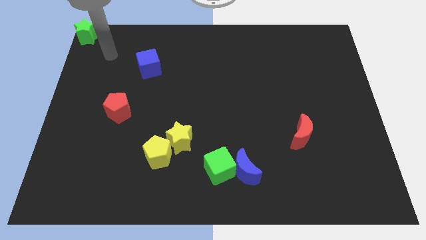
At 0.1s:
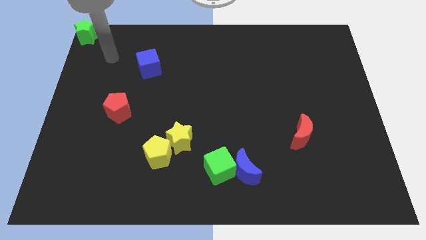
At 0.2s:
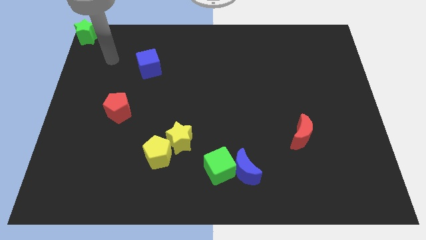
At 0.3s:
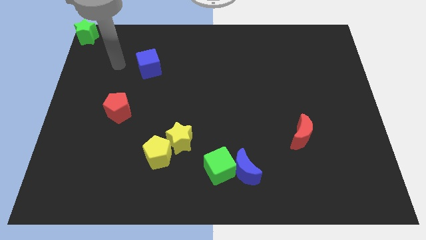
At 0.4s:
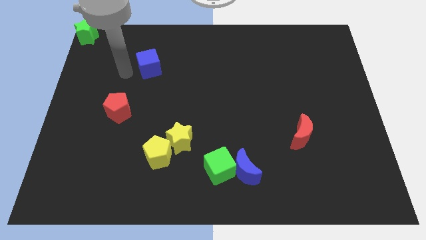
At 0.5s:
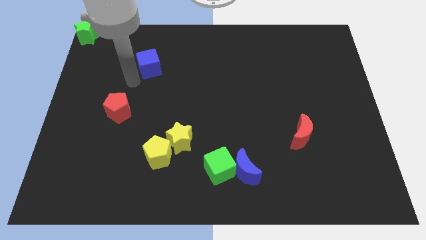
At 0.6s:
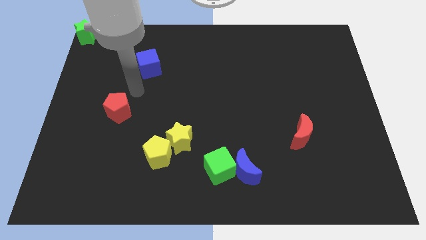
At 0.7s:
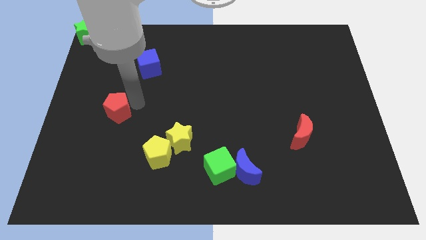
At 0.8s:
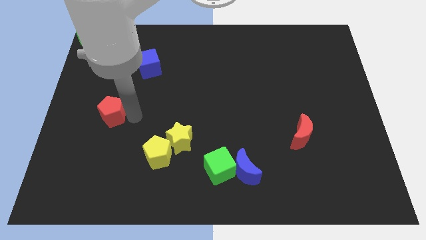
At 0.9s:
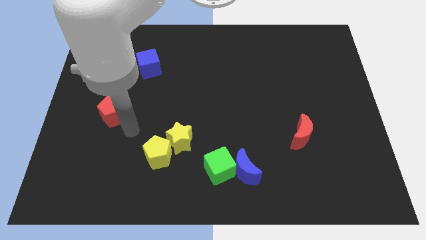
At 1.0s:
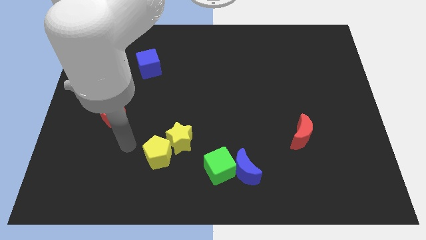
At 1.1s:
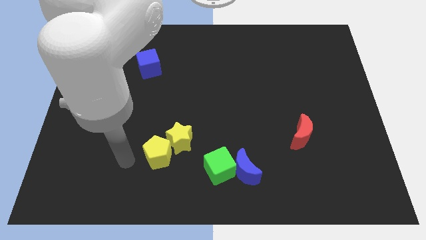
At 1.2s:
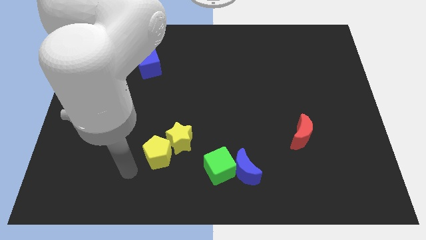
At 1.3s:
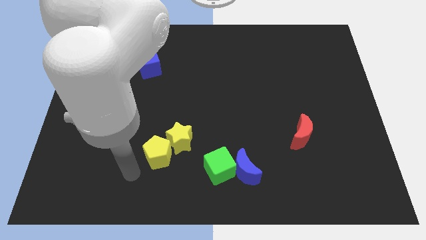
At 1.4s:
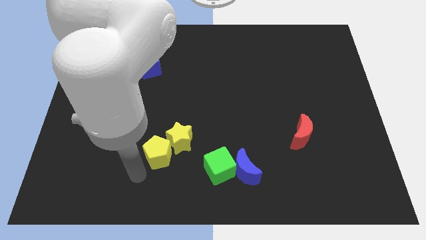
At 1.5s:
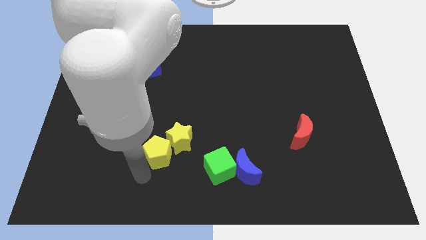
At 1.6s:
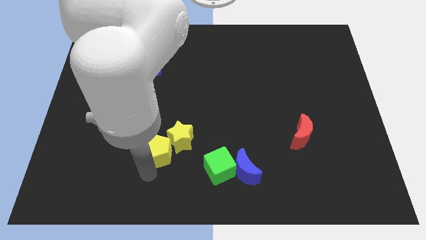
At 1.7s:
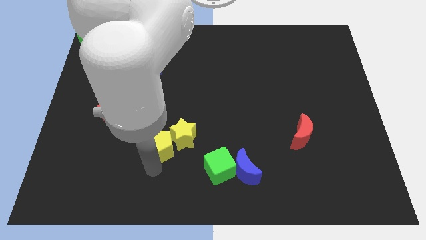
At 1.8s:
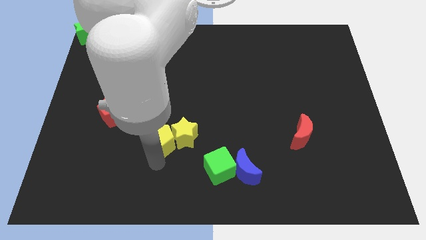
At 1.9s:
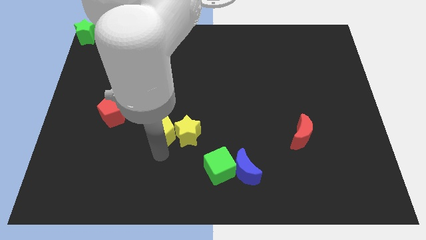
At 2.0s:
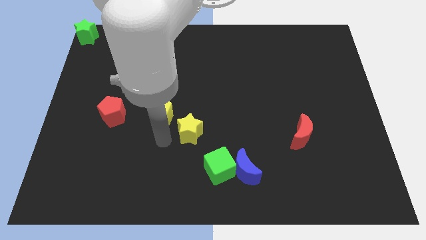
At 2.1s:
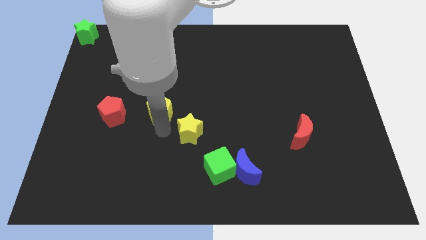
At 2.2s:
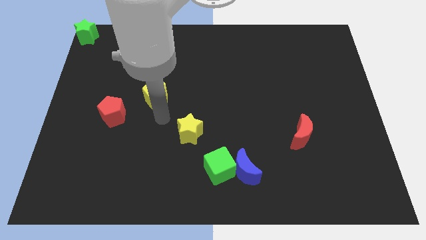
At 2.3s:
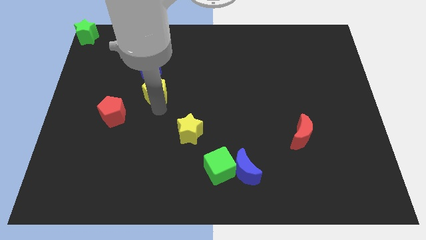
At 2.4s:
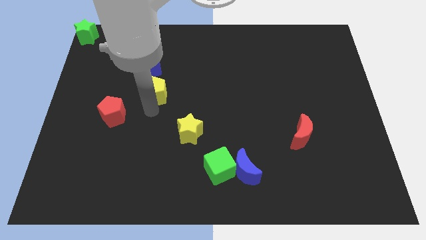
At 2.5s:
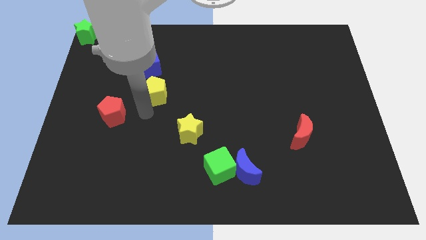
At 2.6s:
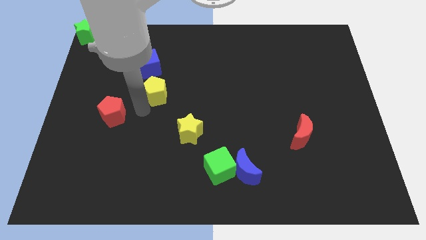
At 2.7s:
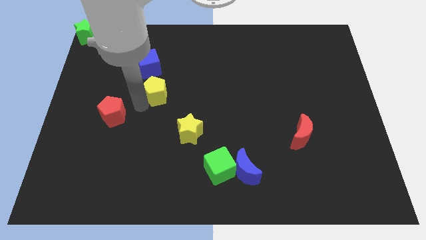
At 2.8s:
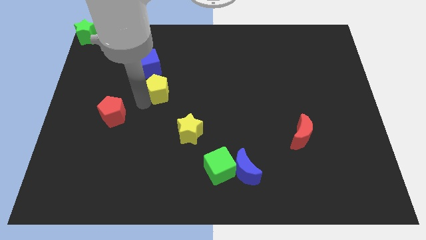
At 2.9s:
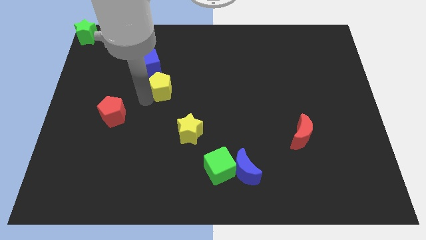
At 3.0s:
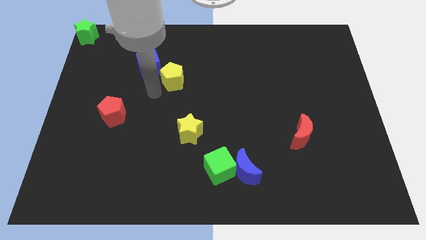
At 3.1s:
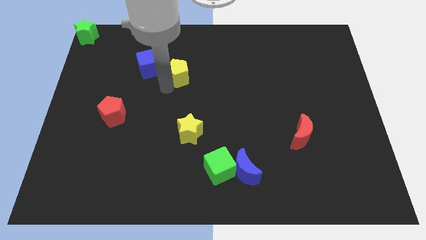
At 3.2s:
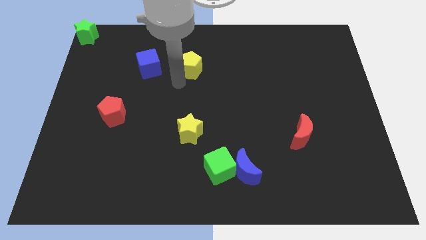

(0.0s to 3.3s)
move the yellow pentagon to the right of the blue cube

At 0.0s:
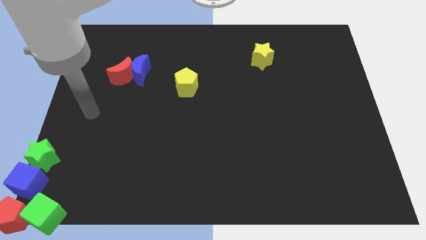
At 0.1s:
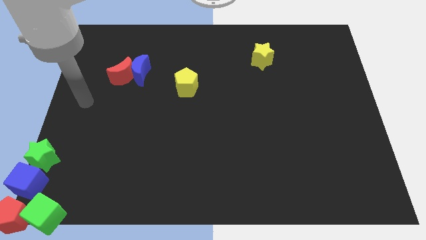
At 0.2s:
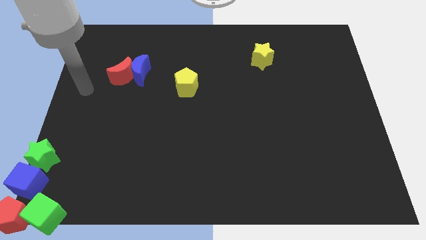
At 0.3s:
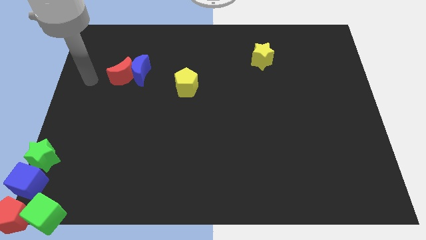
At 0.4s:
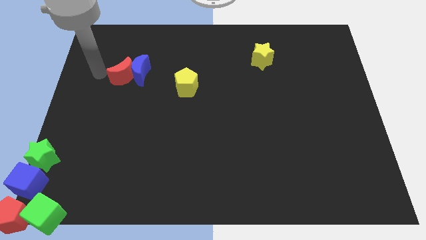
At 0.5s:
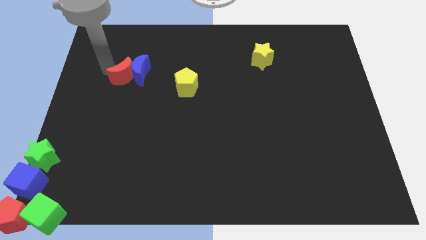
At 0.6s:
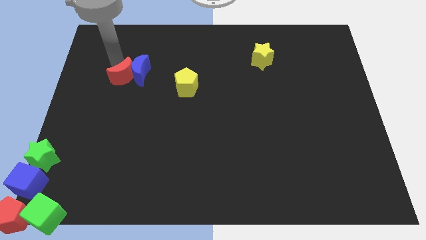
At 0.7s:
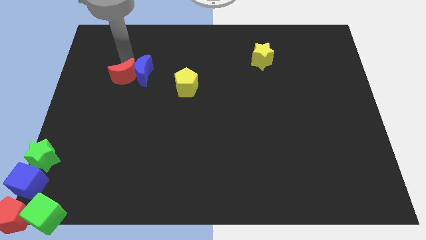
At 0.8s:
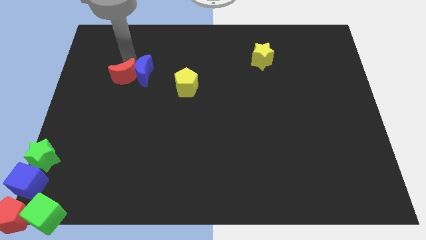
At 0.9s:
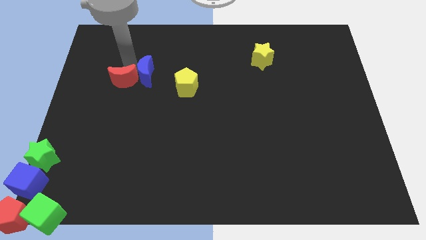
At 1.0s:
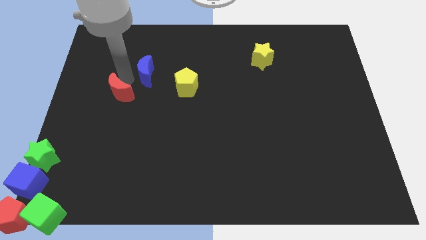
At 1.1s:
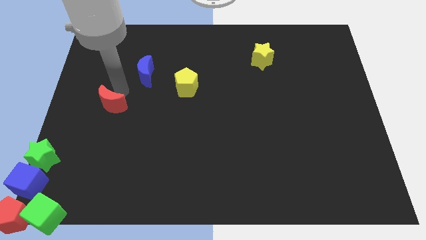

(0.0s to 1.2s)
separate the red moon and blue moon

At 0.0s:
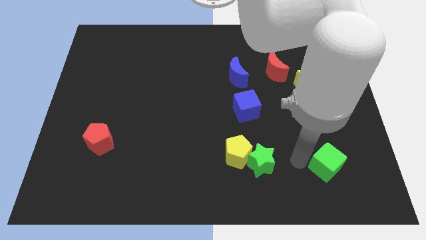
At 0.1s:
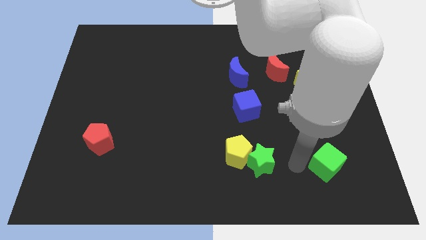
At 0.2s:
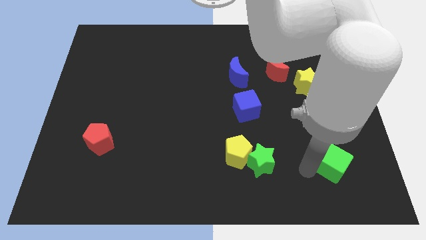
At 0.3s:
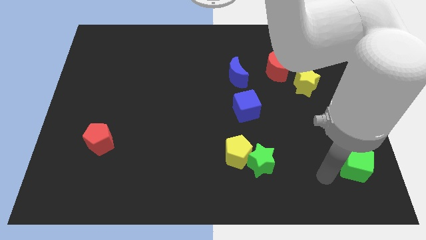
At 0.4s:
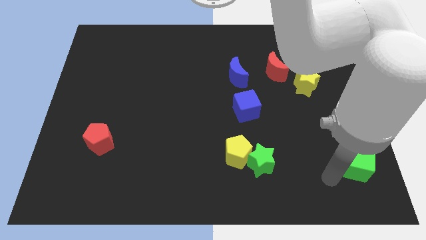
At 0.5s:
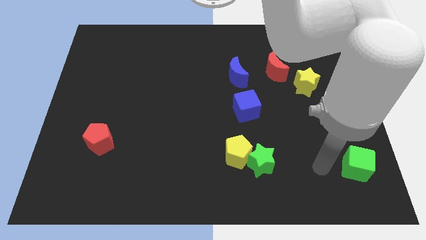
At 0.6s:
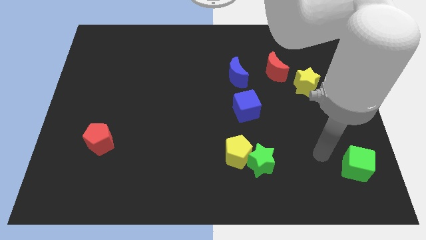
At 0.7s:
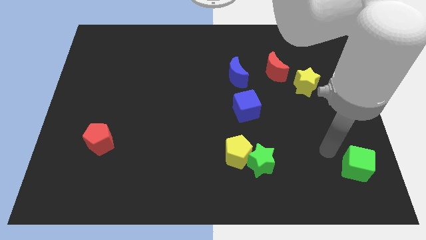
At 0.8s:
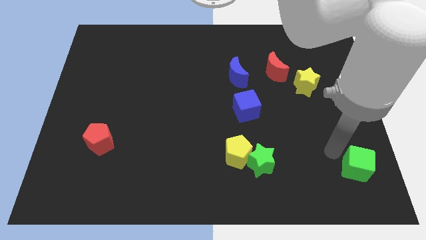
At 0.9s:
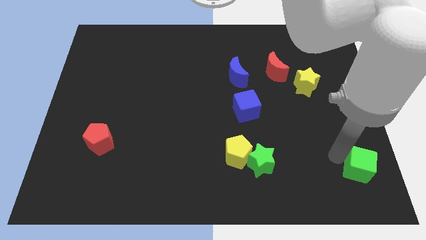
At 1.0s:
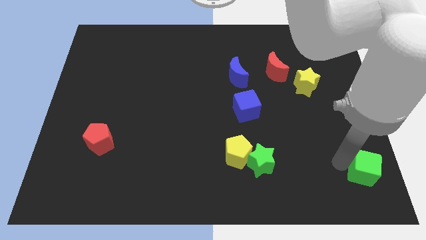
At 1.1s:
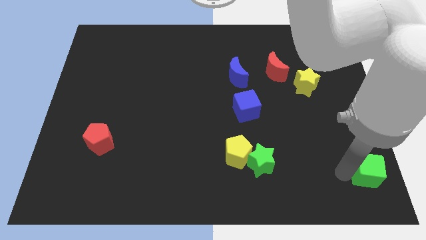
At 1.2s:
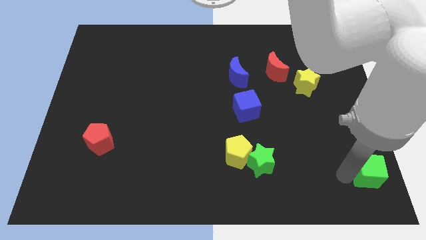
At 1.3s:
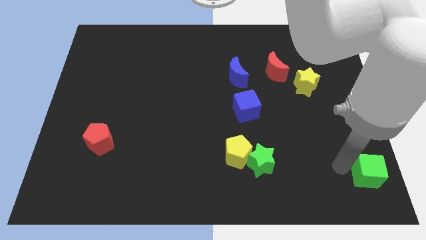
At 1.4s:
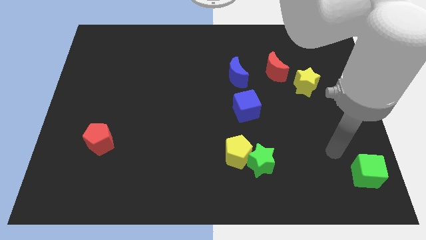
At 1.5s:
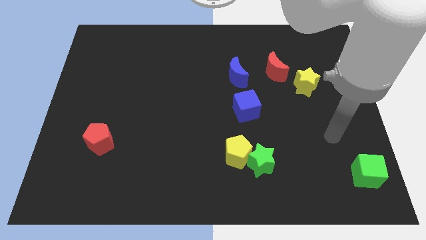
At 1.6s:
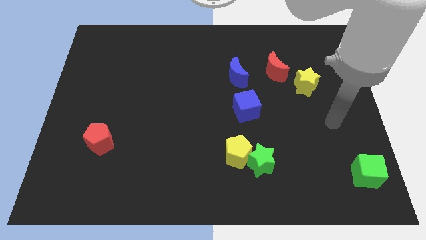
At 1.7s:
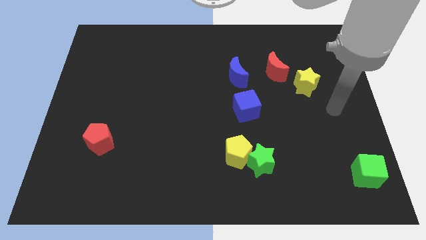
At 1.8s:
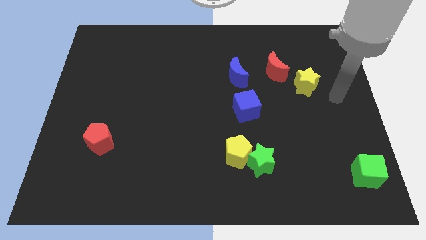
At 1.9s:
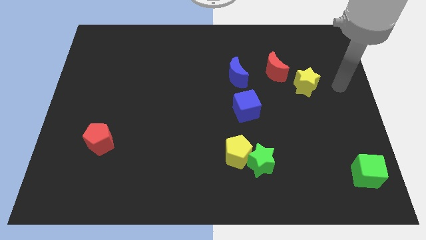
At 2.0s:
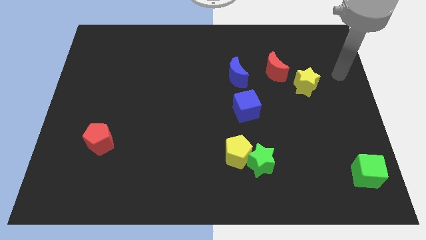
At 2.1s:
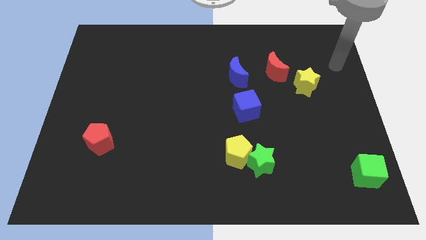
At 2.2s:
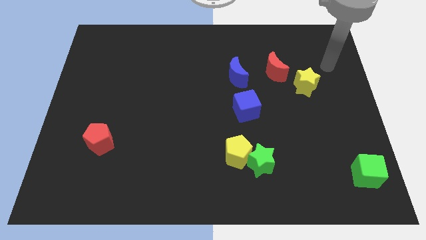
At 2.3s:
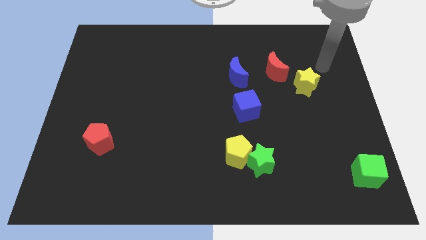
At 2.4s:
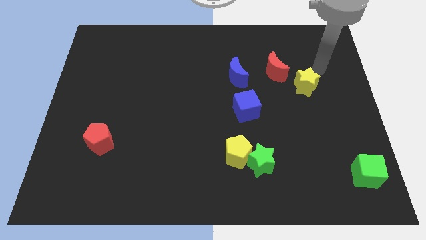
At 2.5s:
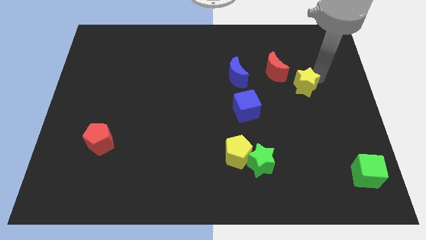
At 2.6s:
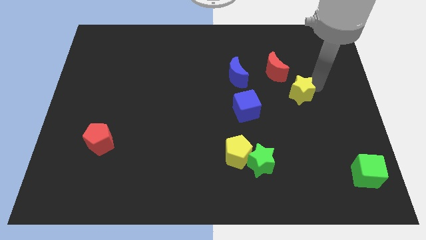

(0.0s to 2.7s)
push green cube to the right side of the board

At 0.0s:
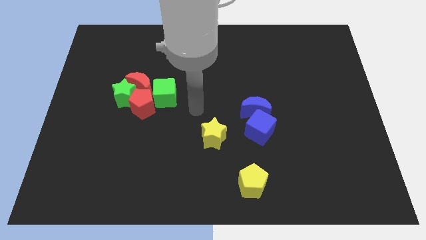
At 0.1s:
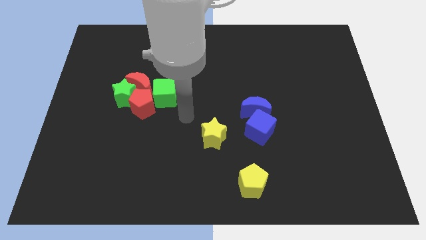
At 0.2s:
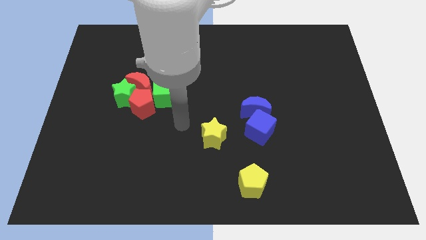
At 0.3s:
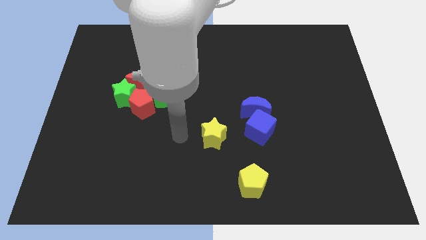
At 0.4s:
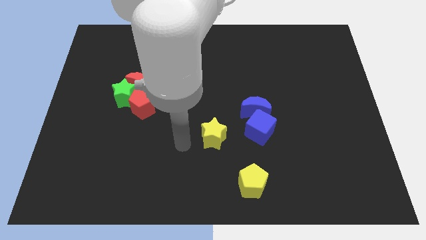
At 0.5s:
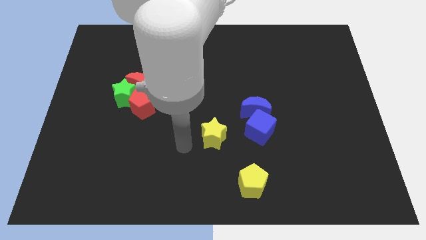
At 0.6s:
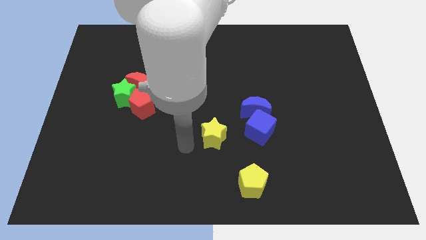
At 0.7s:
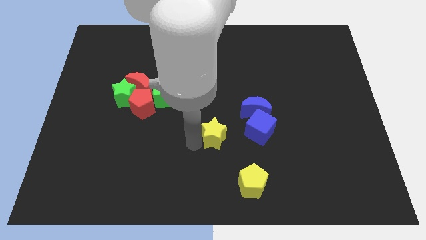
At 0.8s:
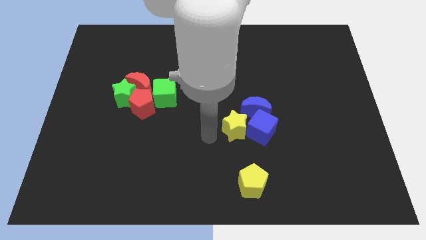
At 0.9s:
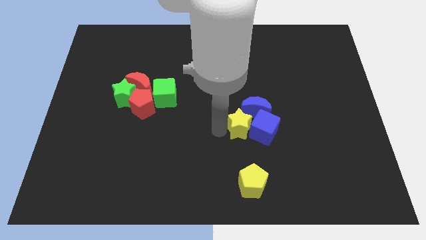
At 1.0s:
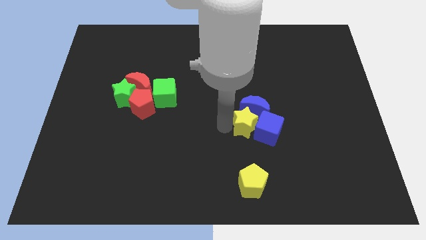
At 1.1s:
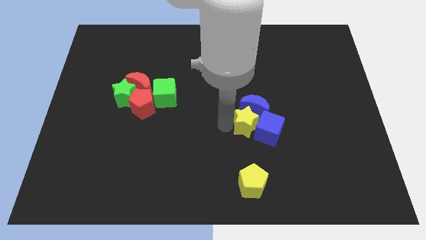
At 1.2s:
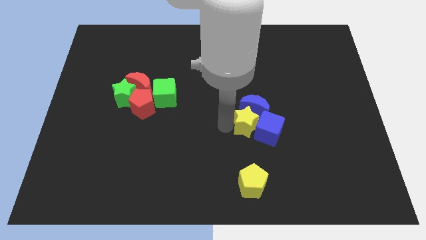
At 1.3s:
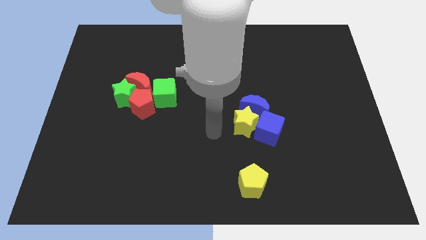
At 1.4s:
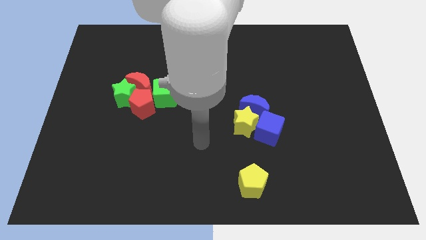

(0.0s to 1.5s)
push the yellow star into the blue blocks

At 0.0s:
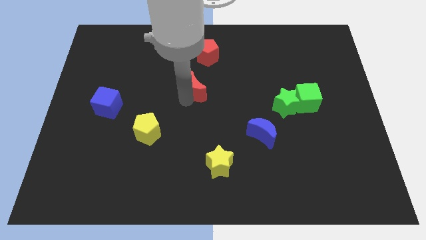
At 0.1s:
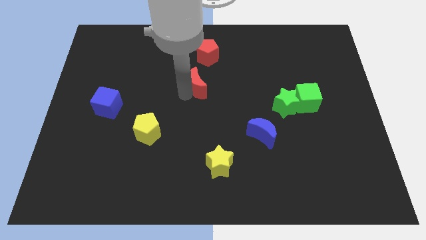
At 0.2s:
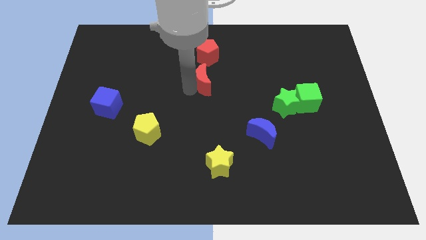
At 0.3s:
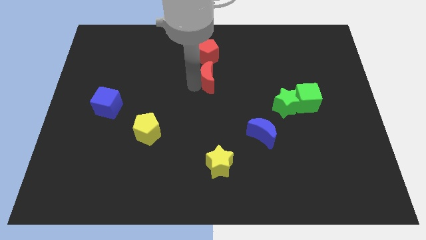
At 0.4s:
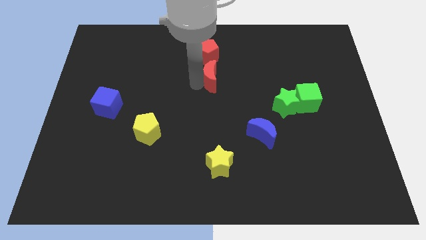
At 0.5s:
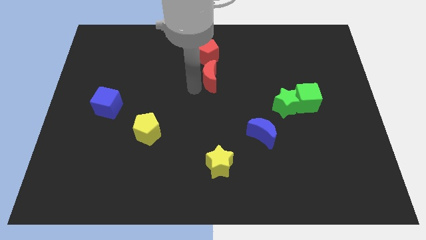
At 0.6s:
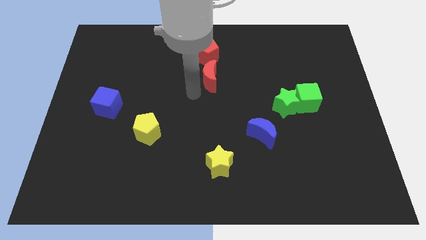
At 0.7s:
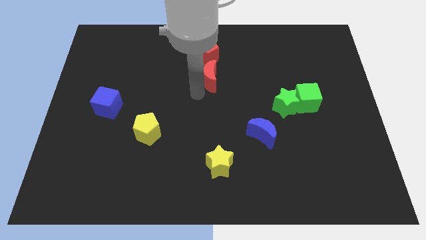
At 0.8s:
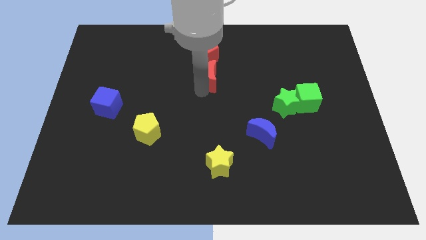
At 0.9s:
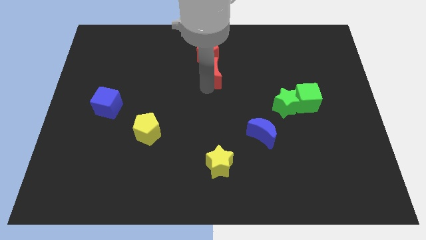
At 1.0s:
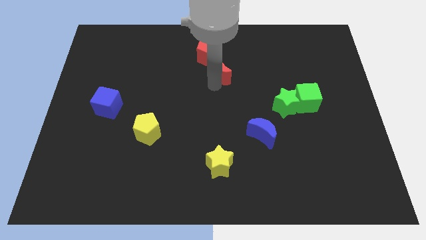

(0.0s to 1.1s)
push the red crescent into the red pentagon
